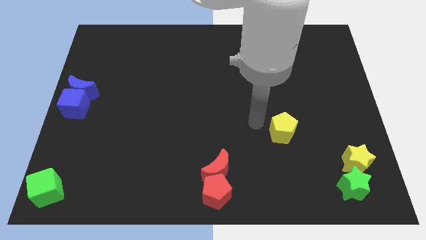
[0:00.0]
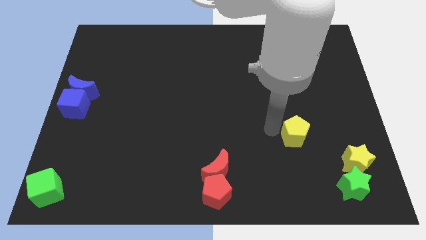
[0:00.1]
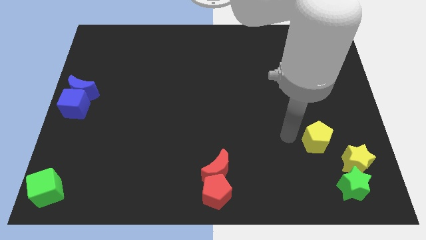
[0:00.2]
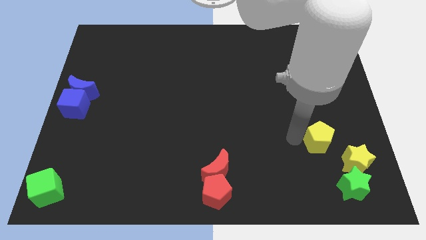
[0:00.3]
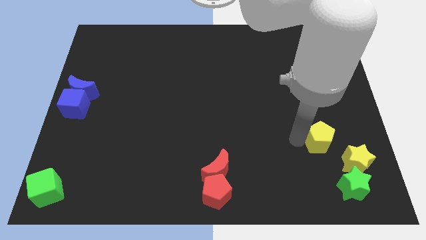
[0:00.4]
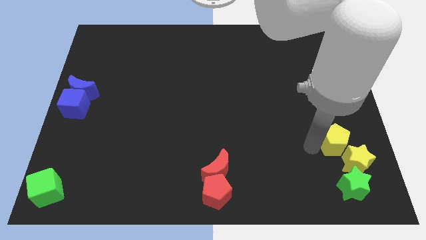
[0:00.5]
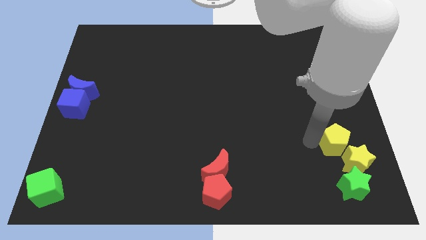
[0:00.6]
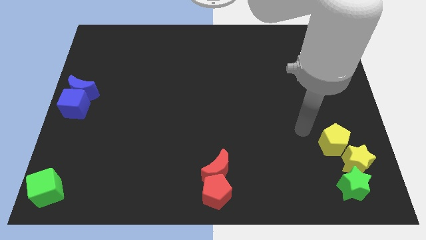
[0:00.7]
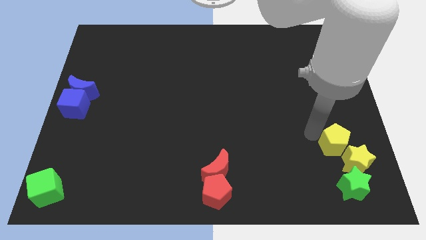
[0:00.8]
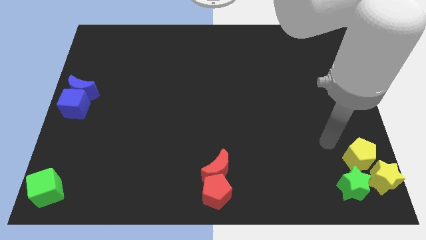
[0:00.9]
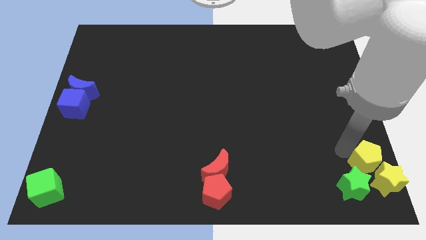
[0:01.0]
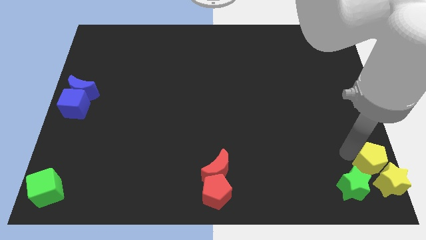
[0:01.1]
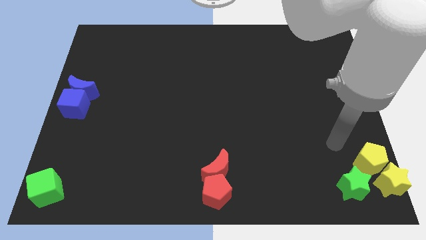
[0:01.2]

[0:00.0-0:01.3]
slide the yellow pentagon into the yellow star

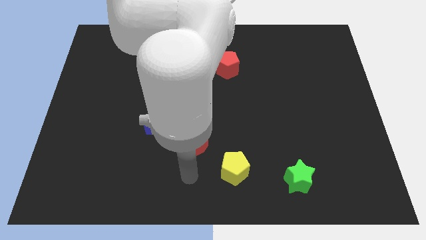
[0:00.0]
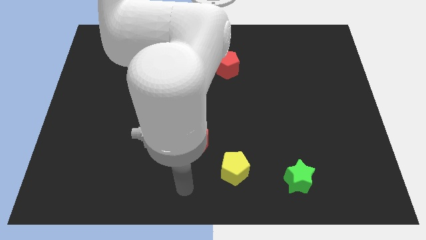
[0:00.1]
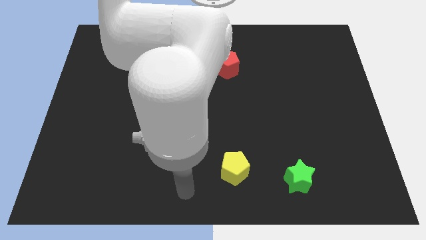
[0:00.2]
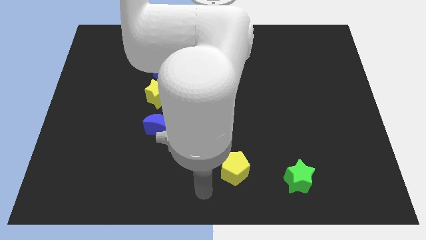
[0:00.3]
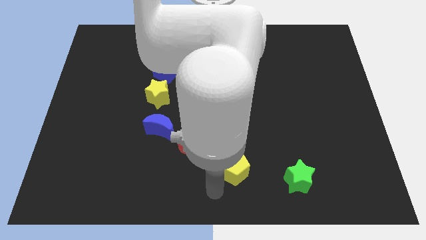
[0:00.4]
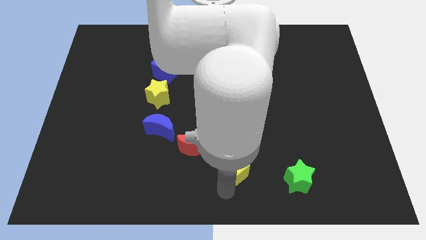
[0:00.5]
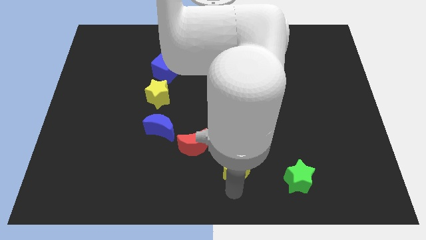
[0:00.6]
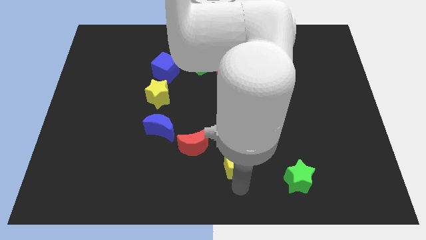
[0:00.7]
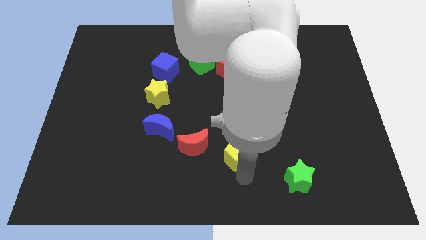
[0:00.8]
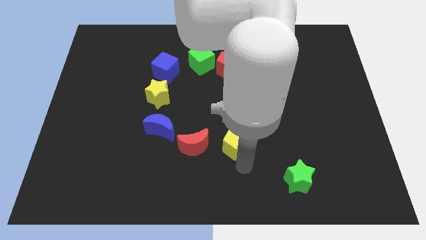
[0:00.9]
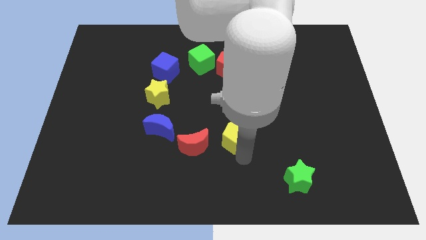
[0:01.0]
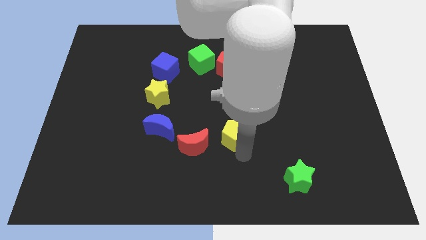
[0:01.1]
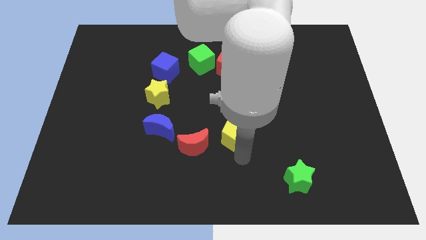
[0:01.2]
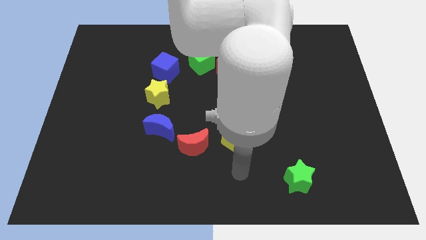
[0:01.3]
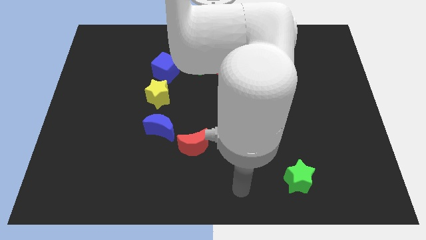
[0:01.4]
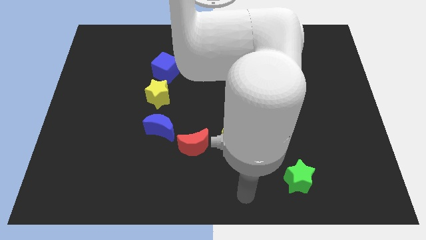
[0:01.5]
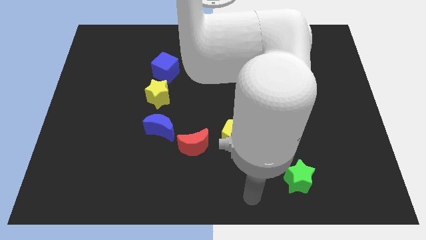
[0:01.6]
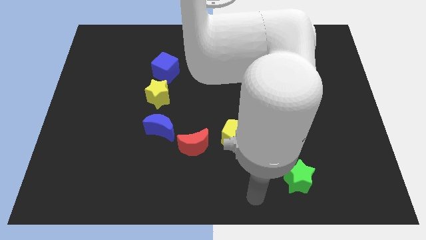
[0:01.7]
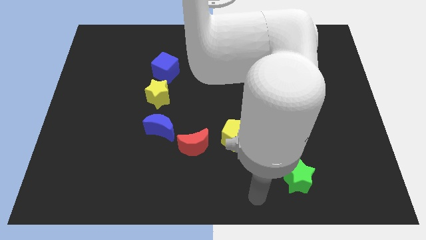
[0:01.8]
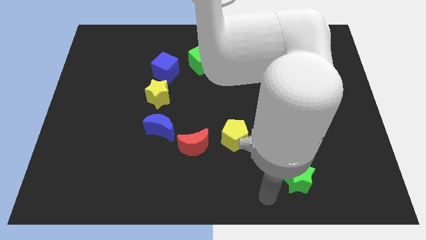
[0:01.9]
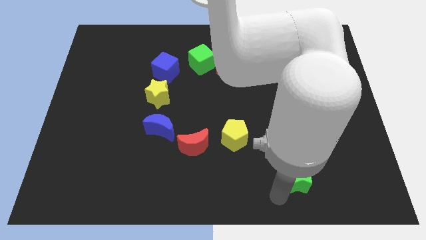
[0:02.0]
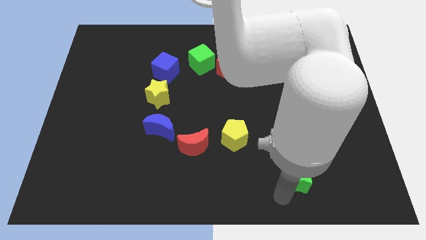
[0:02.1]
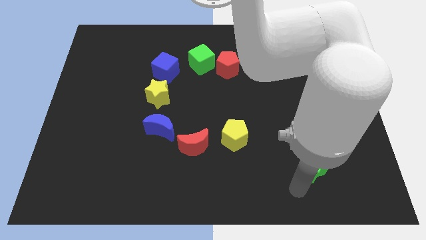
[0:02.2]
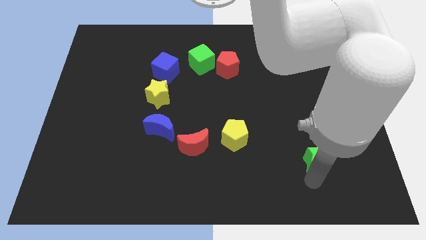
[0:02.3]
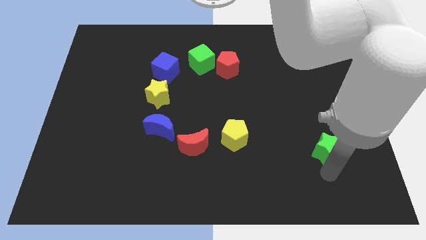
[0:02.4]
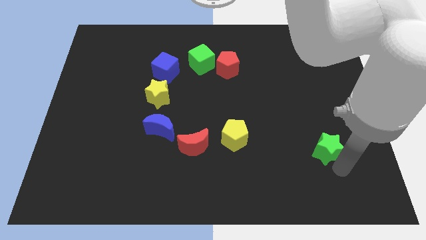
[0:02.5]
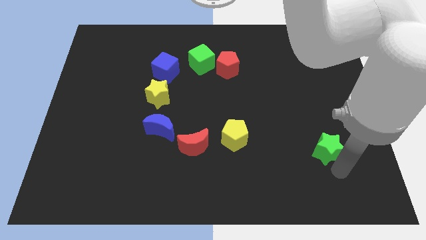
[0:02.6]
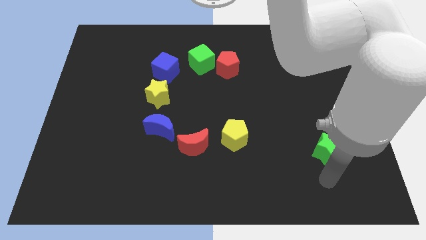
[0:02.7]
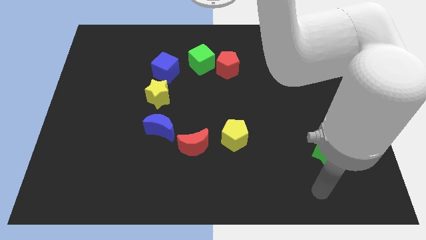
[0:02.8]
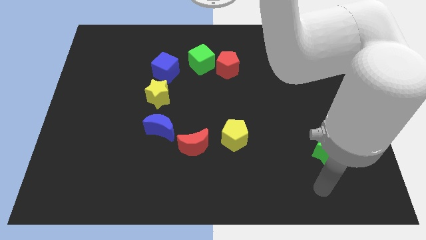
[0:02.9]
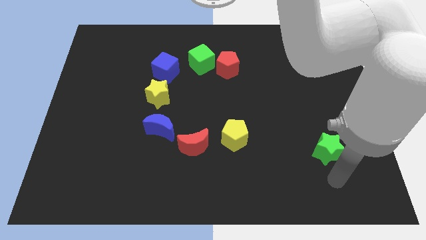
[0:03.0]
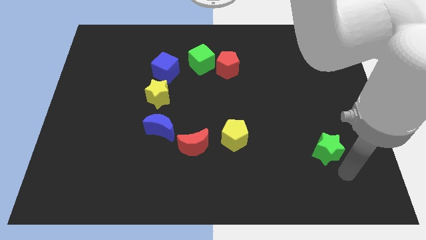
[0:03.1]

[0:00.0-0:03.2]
place the yellow pentagon at right side of the red crescent

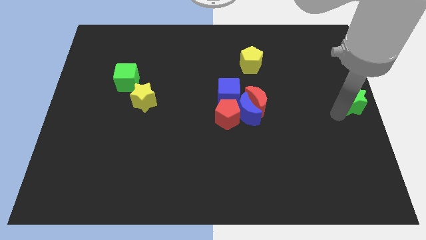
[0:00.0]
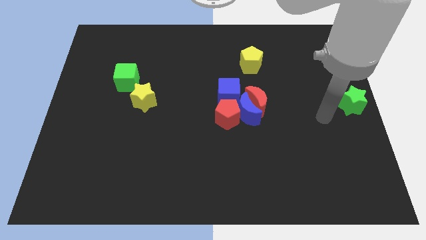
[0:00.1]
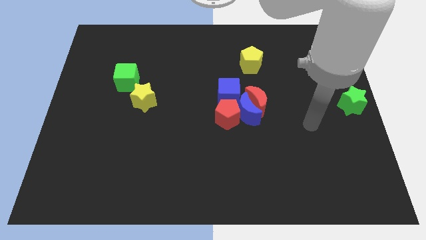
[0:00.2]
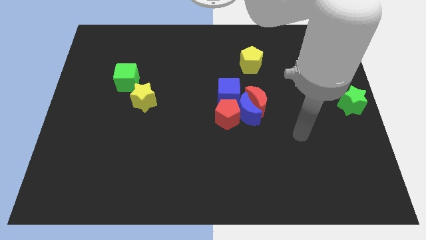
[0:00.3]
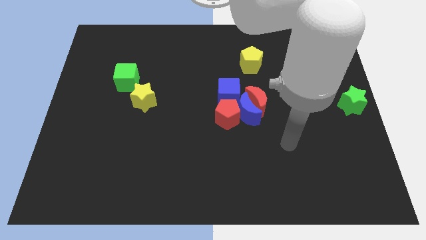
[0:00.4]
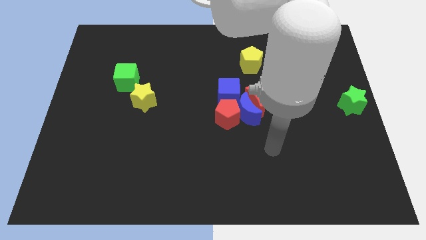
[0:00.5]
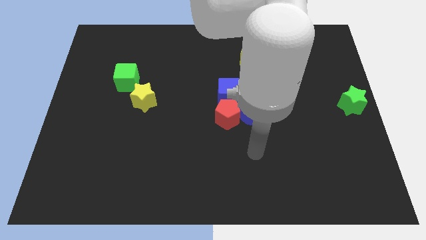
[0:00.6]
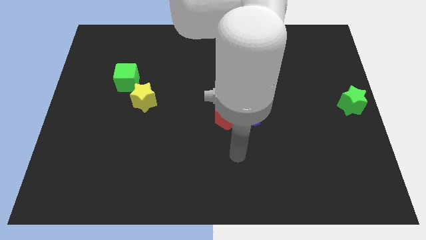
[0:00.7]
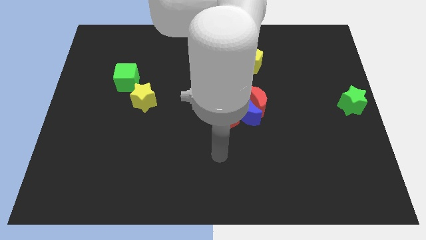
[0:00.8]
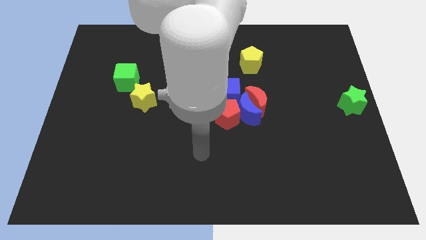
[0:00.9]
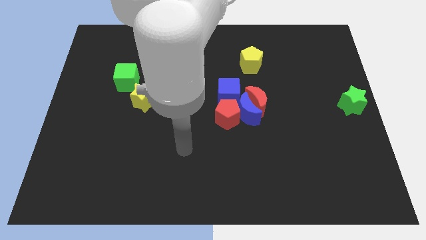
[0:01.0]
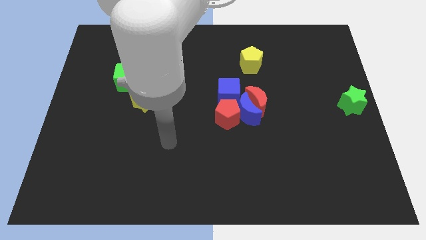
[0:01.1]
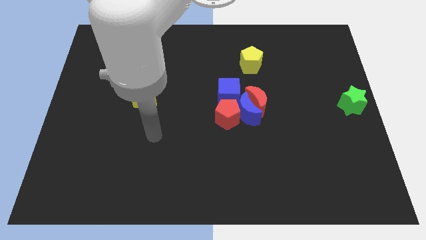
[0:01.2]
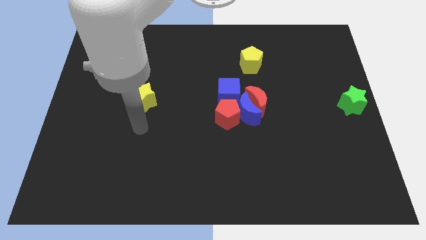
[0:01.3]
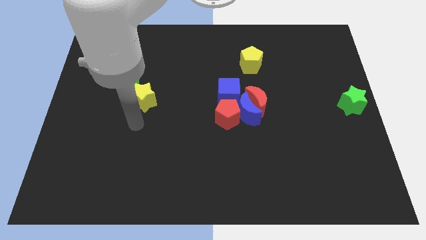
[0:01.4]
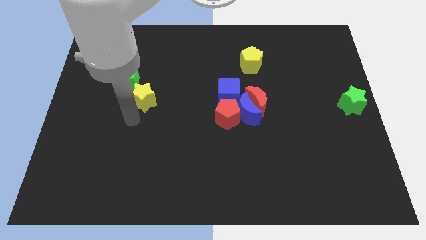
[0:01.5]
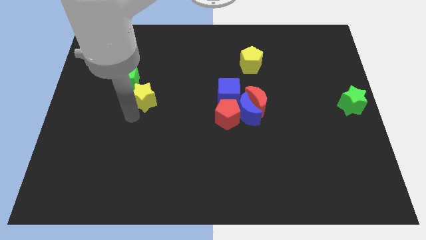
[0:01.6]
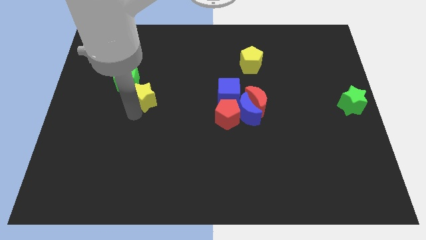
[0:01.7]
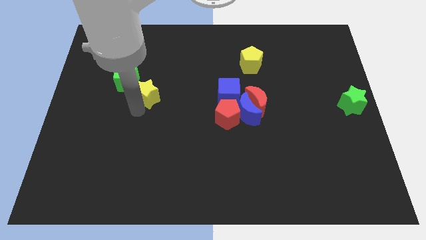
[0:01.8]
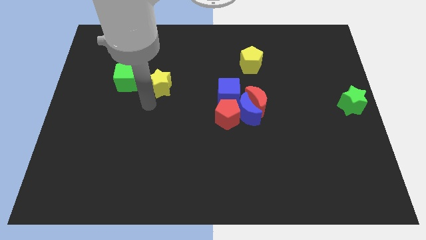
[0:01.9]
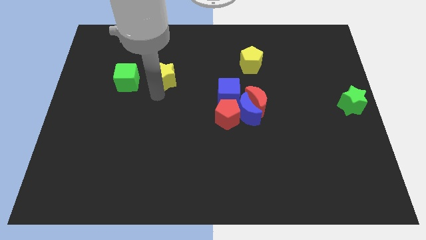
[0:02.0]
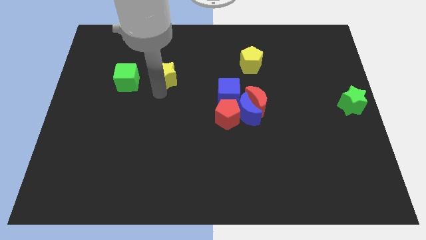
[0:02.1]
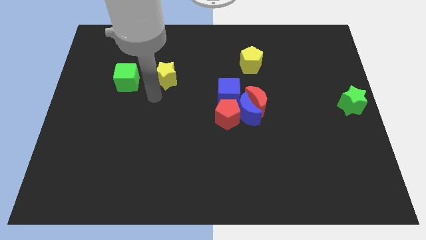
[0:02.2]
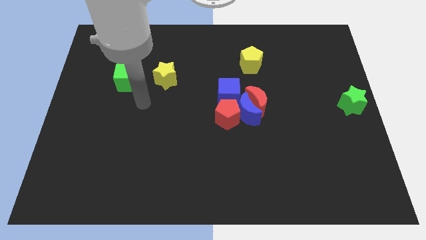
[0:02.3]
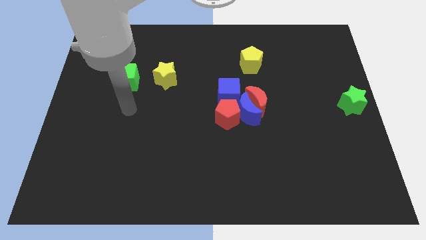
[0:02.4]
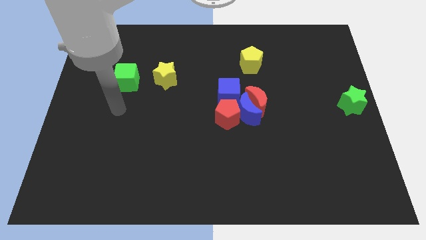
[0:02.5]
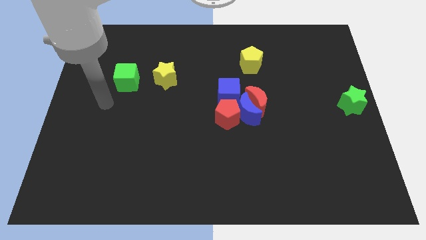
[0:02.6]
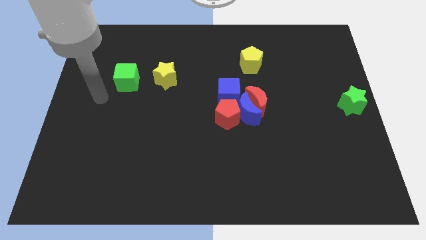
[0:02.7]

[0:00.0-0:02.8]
place the yellow star to the right side of green cube

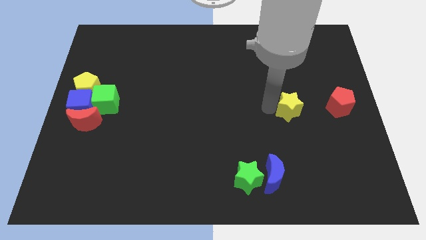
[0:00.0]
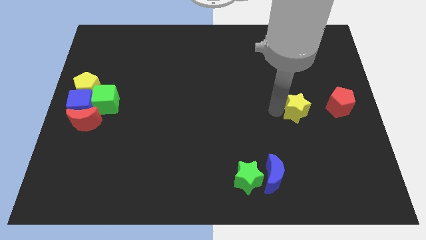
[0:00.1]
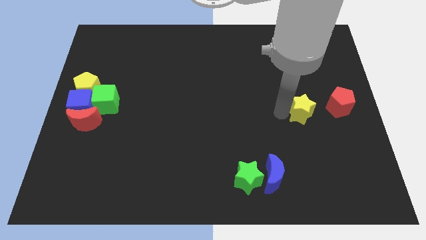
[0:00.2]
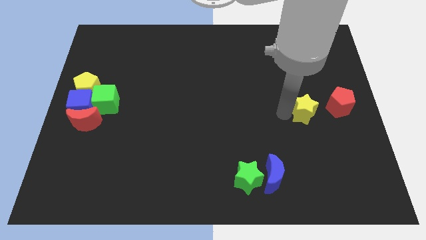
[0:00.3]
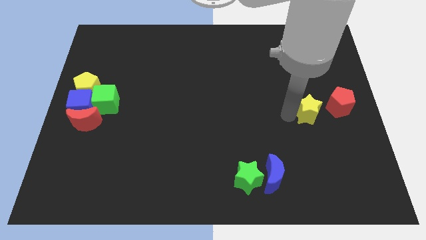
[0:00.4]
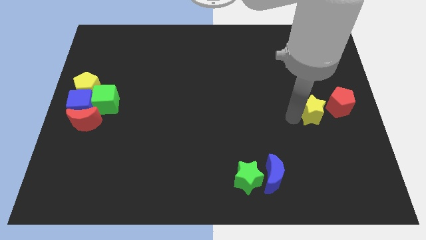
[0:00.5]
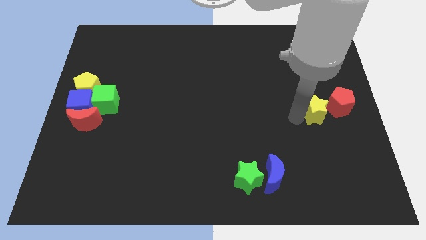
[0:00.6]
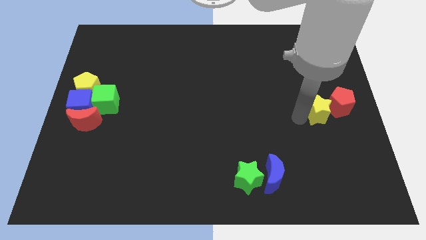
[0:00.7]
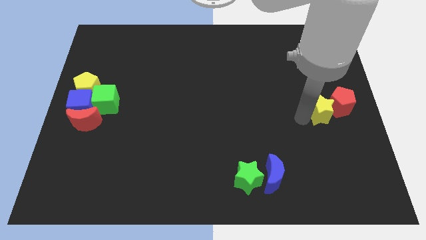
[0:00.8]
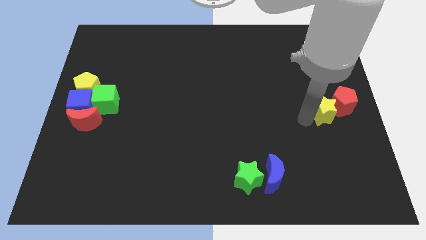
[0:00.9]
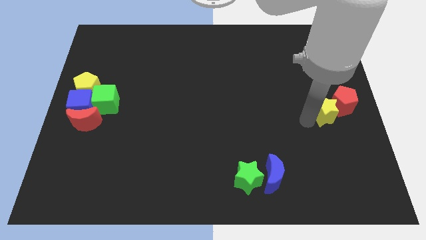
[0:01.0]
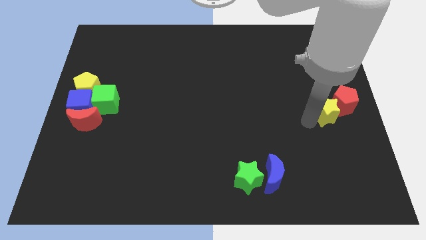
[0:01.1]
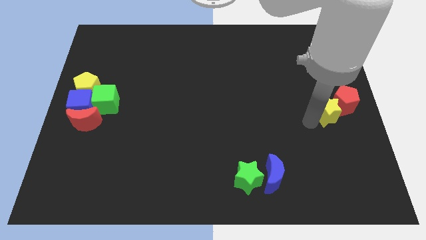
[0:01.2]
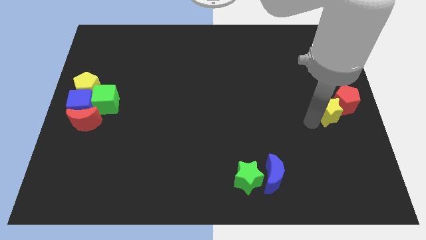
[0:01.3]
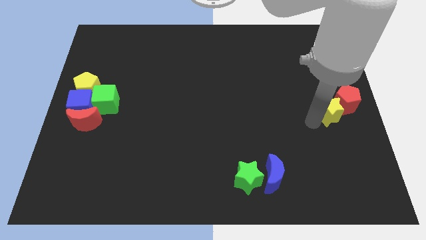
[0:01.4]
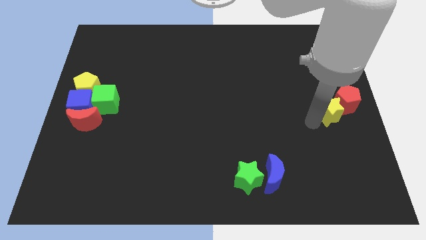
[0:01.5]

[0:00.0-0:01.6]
push the yellow star and red pentagon together at the center left

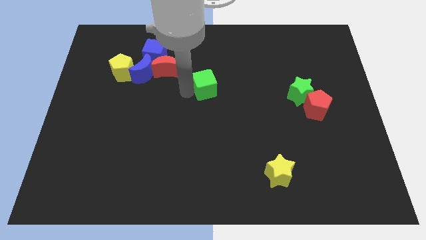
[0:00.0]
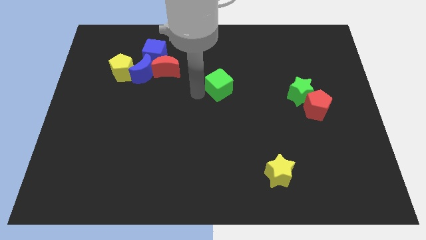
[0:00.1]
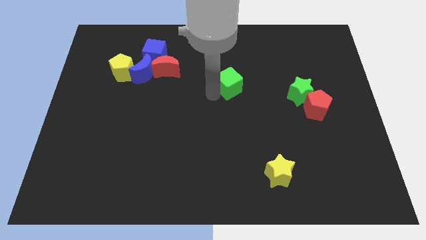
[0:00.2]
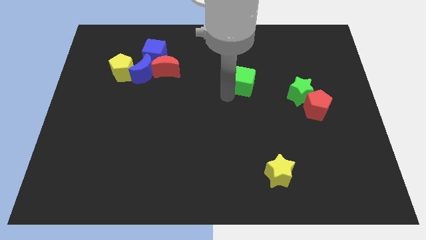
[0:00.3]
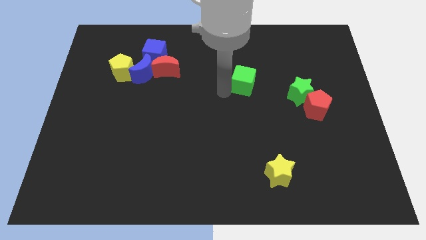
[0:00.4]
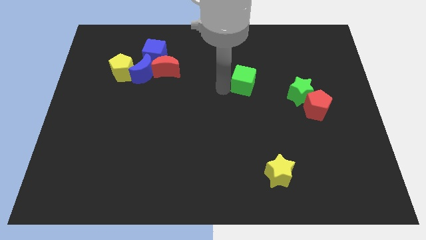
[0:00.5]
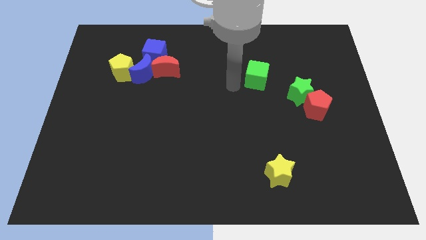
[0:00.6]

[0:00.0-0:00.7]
slide the green cube towards the green star
